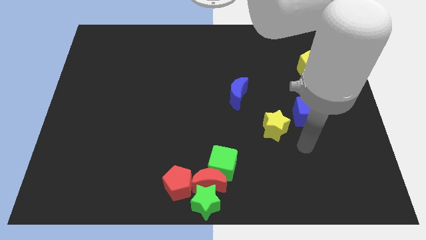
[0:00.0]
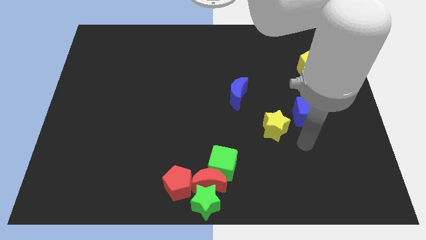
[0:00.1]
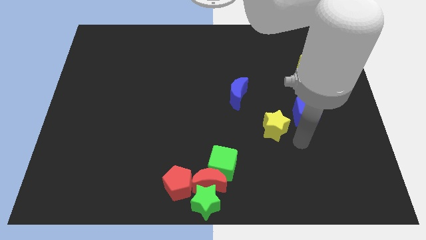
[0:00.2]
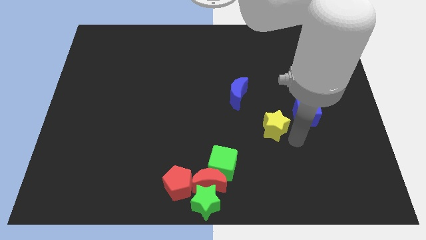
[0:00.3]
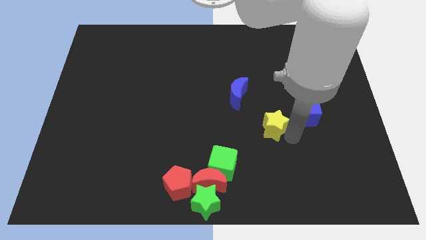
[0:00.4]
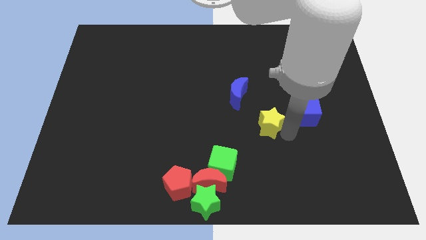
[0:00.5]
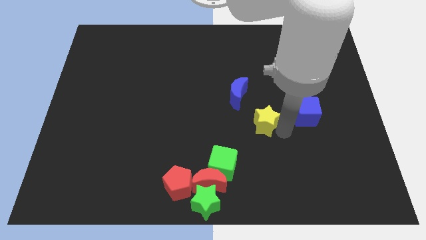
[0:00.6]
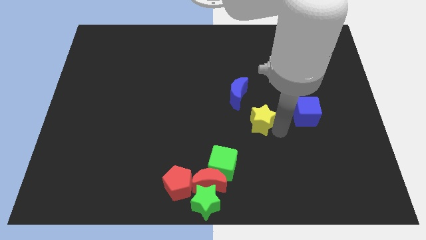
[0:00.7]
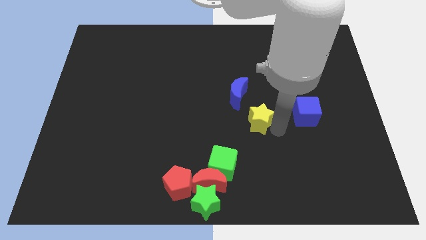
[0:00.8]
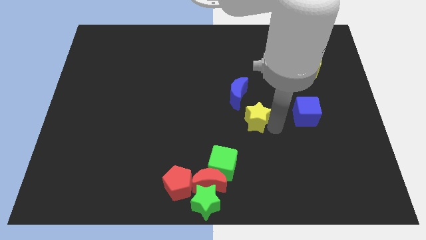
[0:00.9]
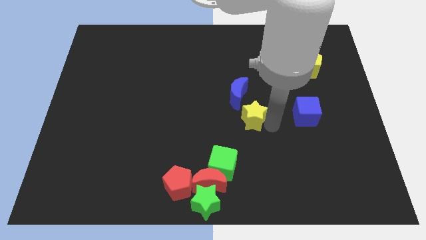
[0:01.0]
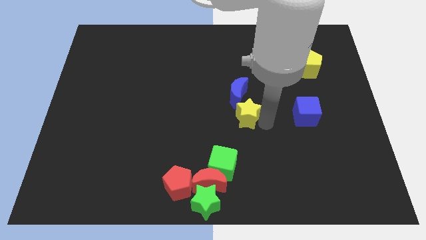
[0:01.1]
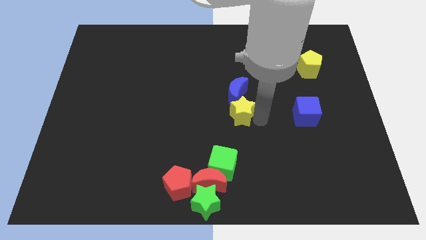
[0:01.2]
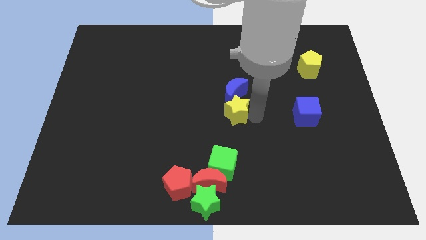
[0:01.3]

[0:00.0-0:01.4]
push the yellow star below blue moon

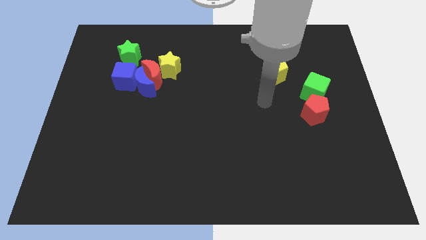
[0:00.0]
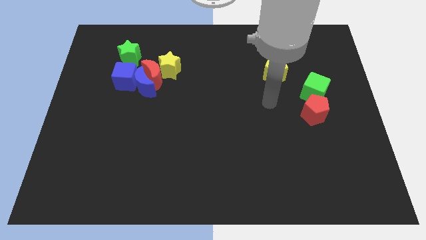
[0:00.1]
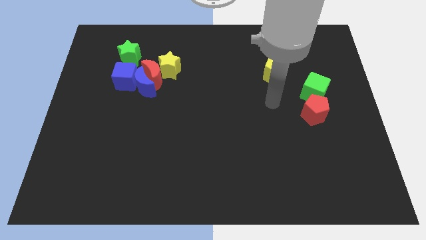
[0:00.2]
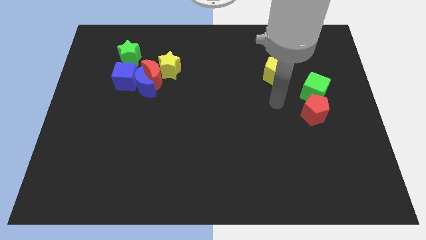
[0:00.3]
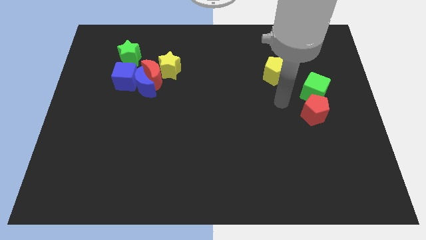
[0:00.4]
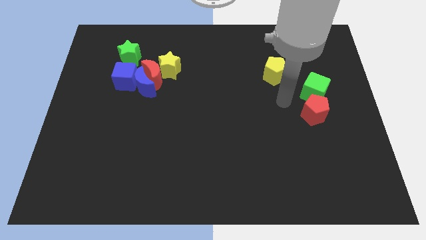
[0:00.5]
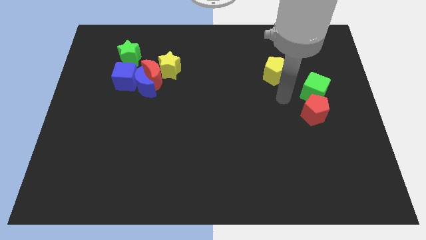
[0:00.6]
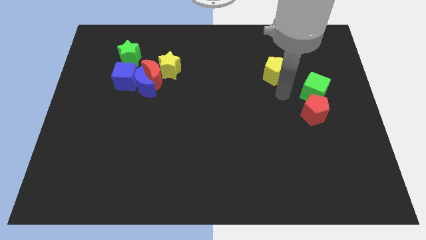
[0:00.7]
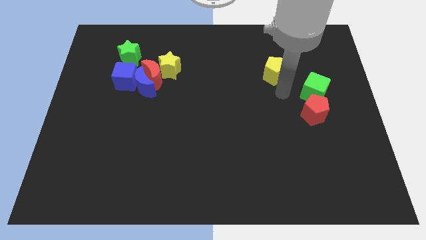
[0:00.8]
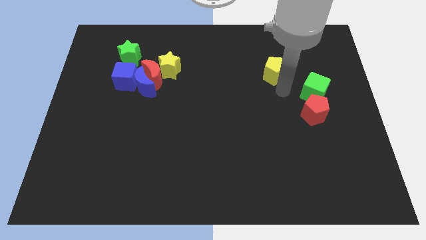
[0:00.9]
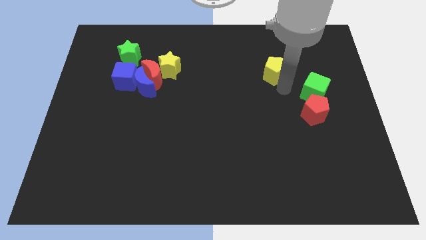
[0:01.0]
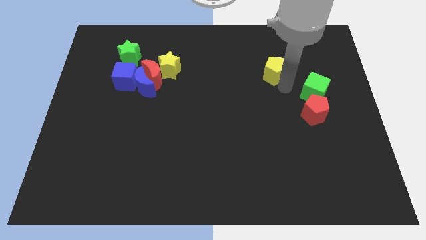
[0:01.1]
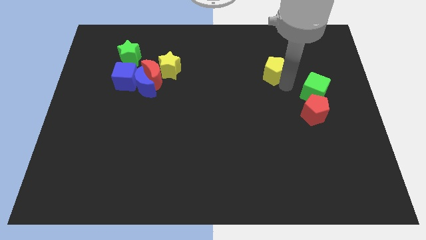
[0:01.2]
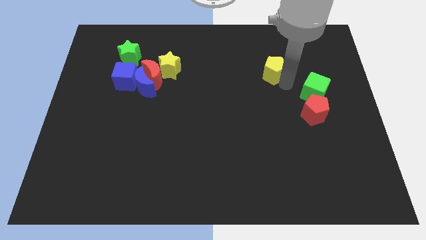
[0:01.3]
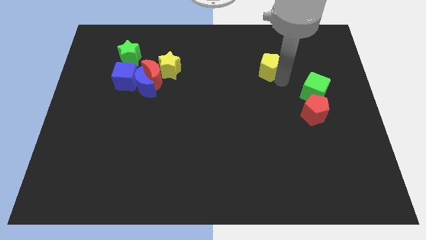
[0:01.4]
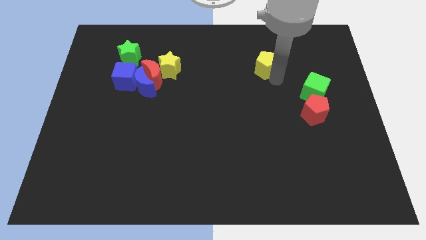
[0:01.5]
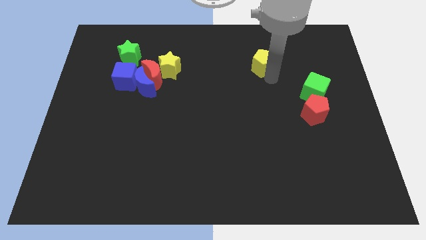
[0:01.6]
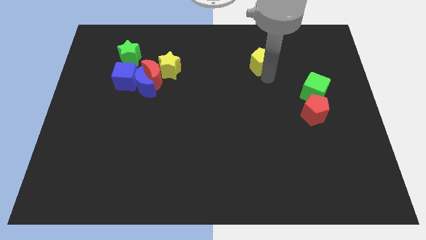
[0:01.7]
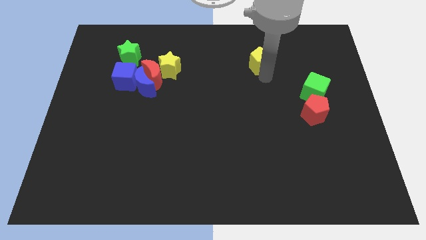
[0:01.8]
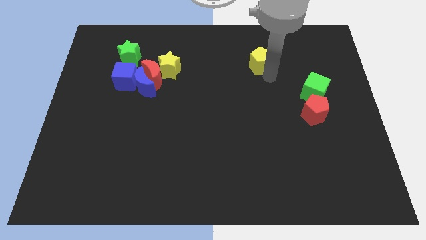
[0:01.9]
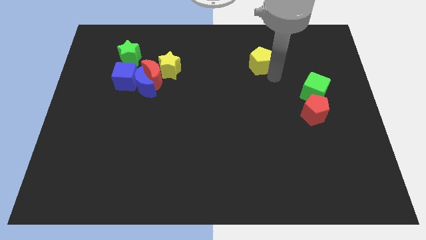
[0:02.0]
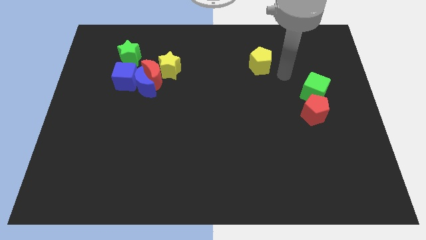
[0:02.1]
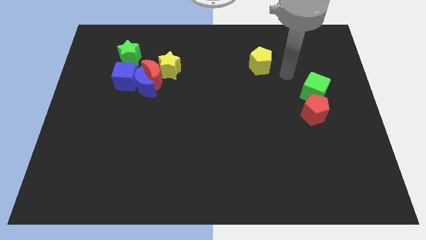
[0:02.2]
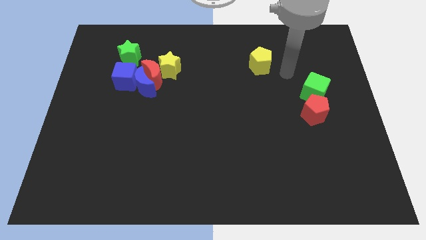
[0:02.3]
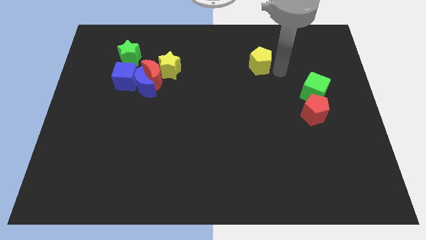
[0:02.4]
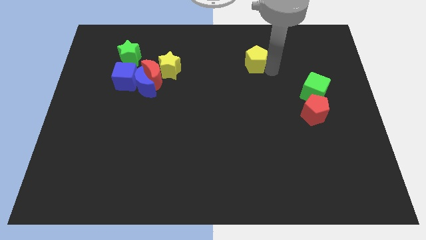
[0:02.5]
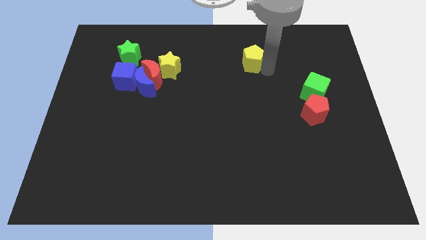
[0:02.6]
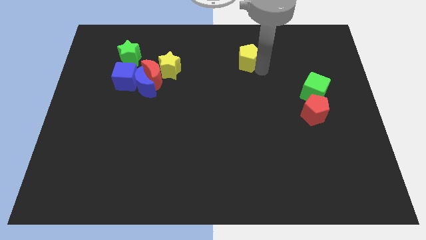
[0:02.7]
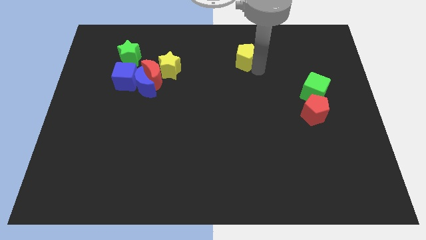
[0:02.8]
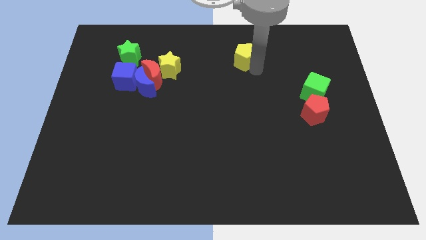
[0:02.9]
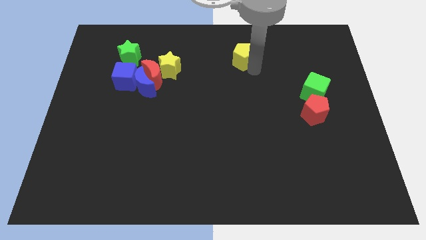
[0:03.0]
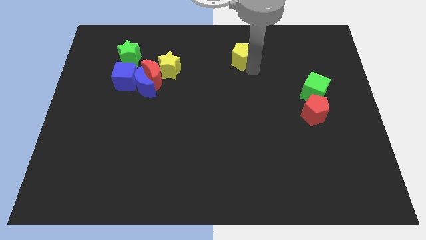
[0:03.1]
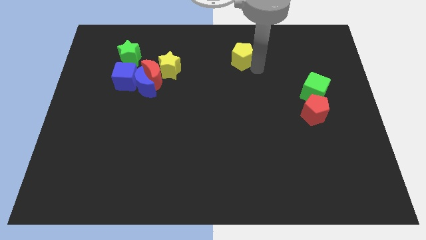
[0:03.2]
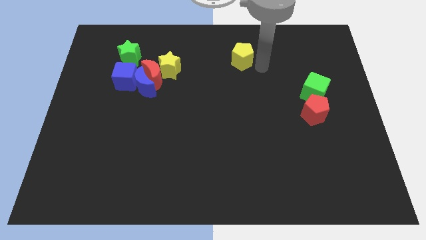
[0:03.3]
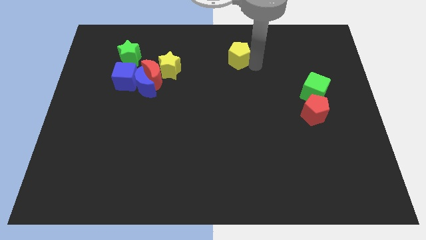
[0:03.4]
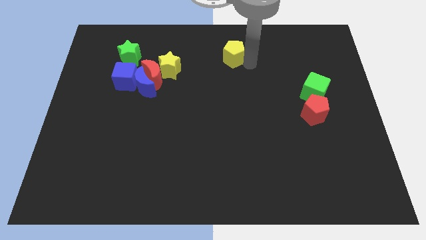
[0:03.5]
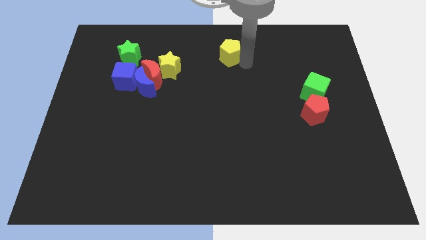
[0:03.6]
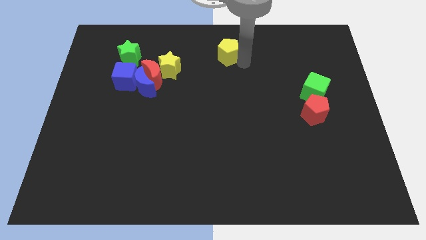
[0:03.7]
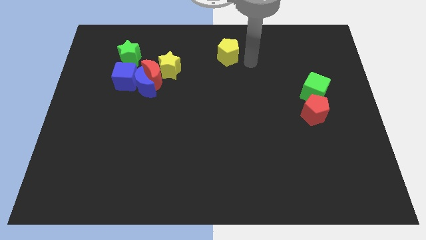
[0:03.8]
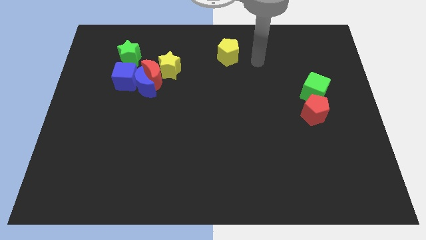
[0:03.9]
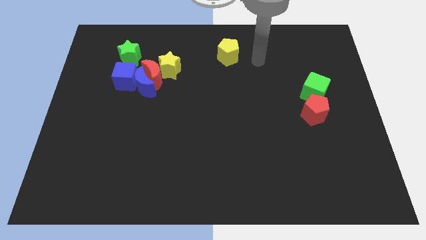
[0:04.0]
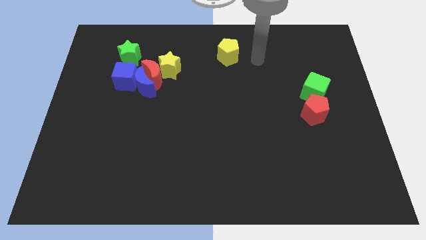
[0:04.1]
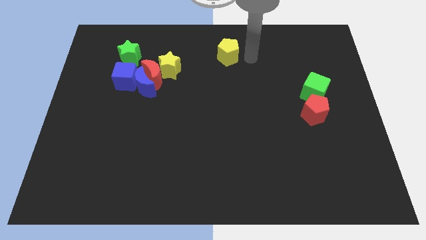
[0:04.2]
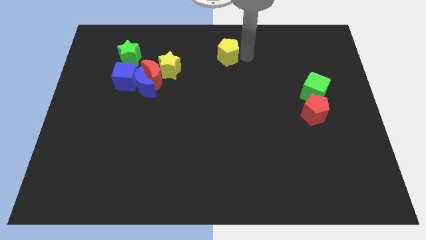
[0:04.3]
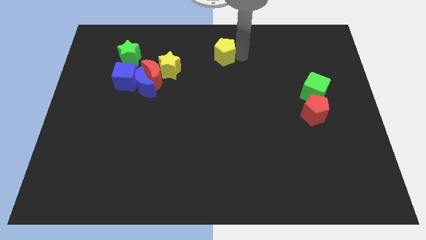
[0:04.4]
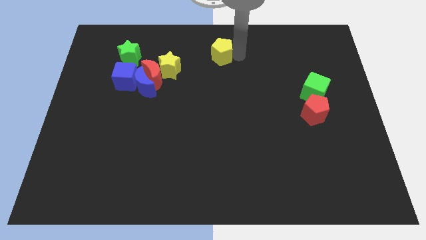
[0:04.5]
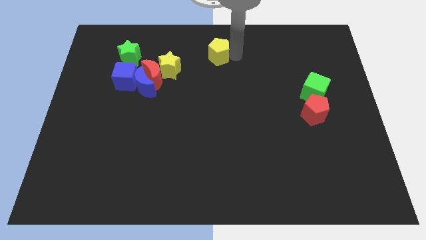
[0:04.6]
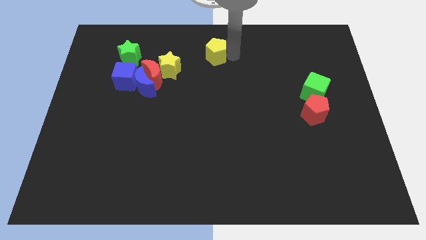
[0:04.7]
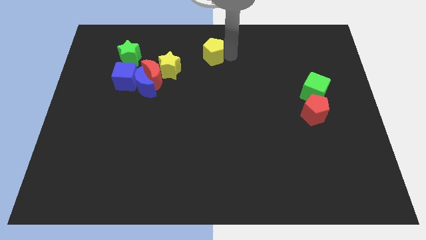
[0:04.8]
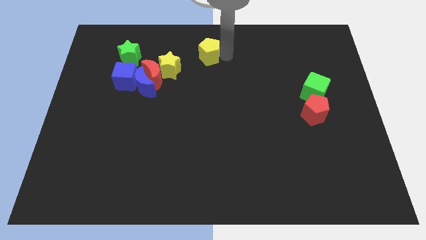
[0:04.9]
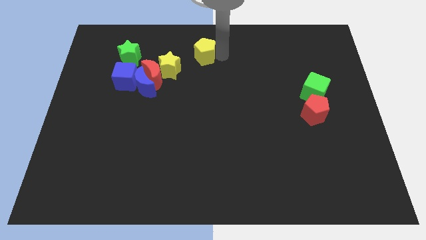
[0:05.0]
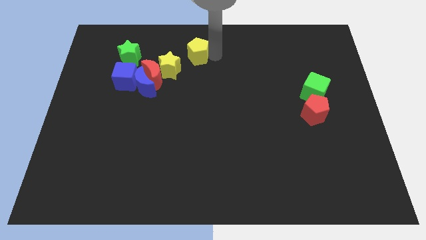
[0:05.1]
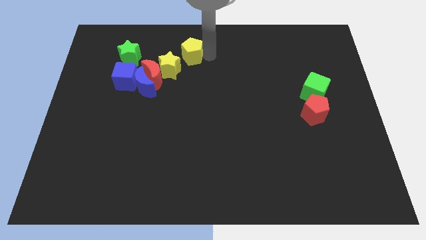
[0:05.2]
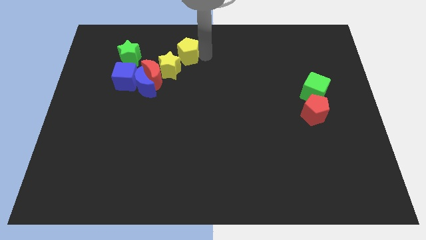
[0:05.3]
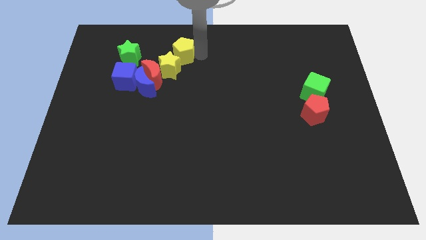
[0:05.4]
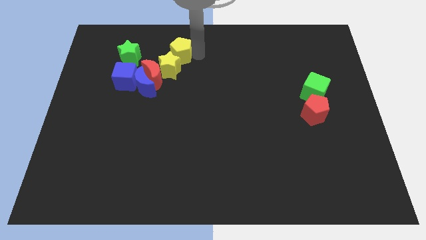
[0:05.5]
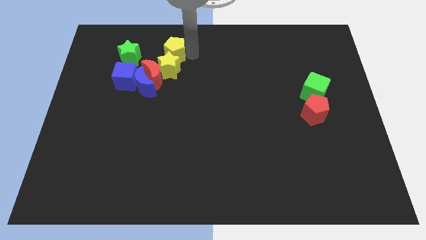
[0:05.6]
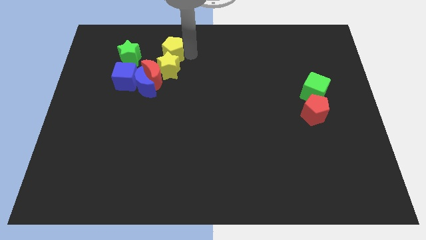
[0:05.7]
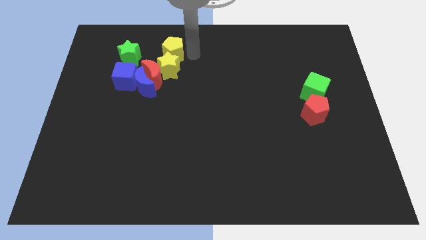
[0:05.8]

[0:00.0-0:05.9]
push yellow pentagon above yellow star

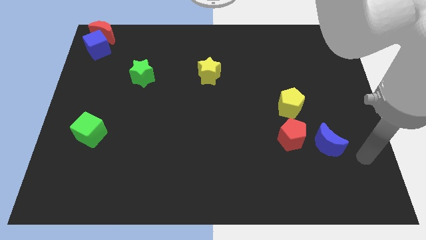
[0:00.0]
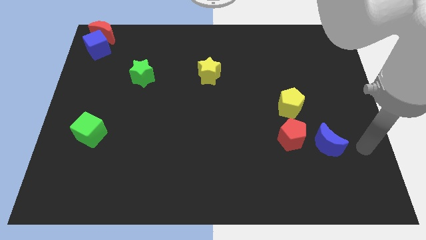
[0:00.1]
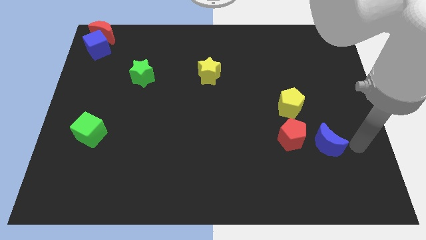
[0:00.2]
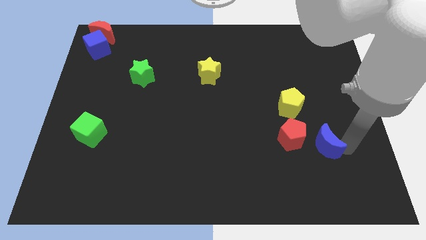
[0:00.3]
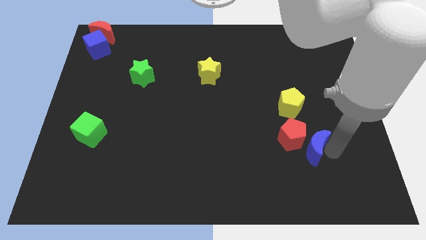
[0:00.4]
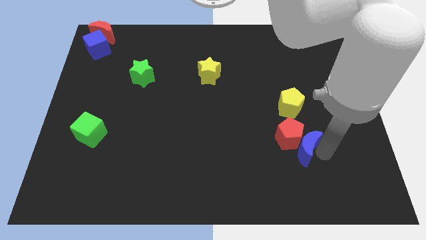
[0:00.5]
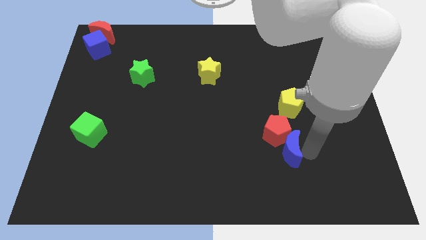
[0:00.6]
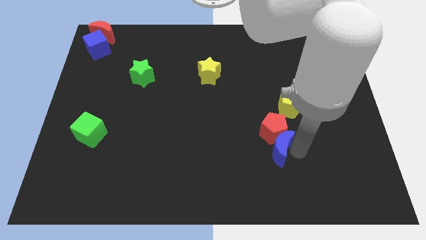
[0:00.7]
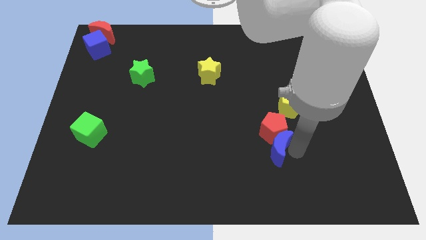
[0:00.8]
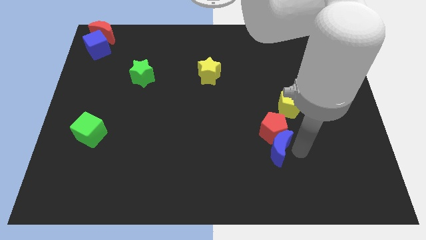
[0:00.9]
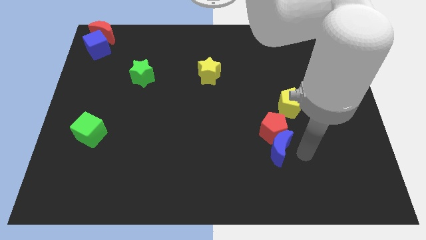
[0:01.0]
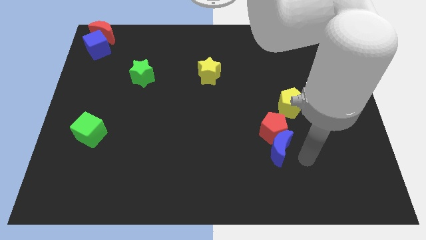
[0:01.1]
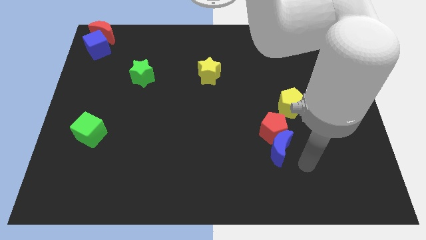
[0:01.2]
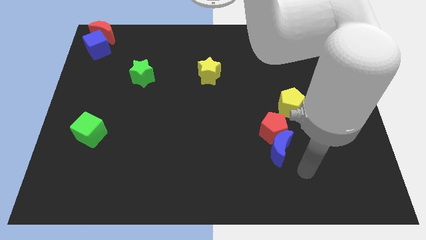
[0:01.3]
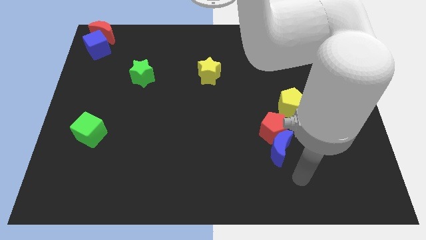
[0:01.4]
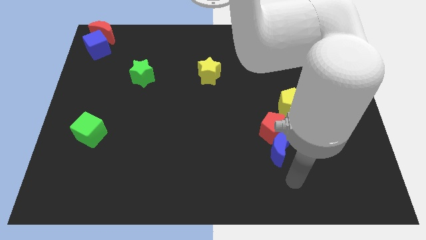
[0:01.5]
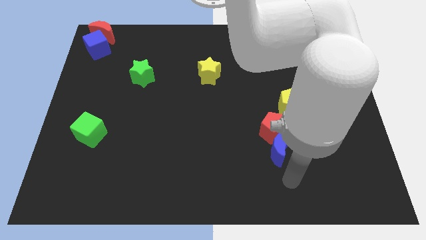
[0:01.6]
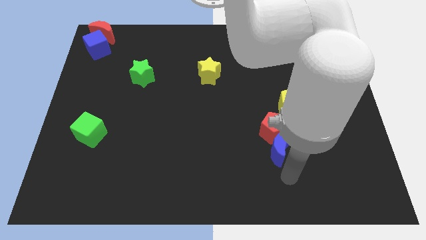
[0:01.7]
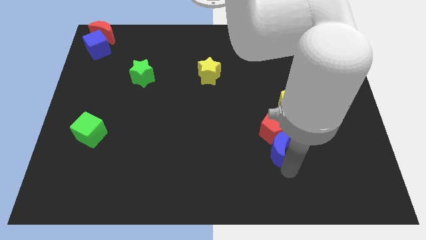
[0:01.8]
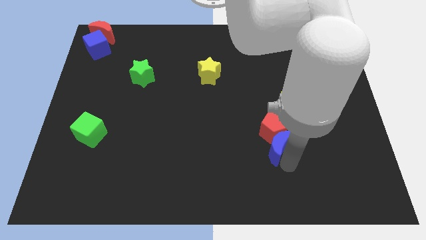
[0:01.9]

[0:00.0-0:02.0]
push the blue crescent into red pentagon
